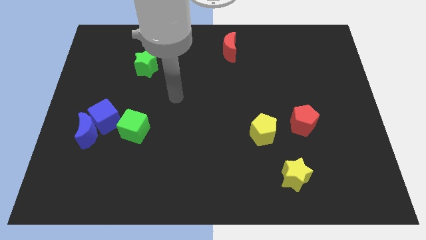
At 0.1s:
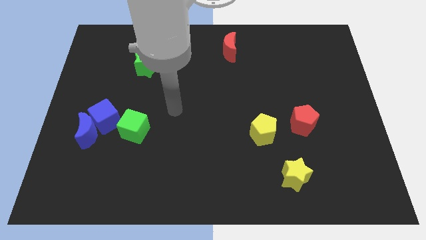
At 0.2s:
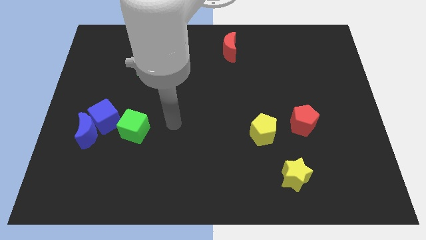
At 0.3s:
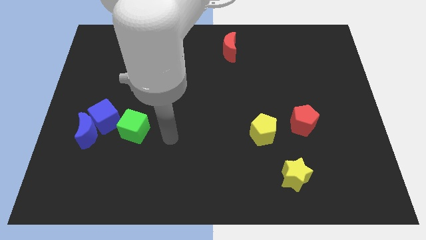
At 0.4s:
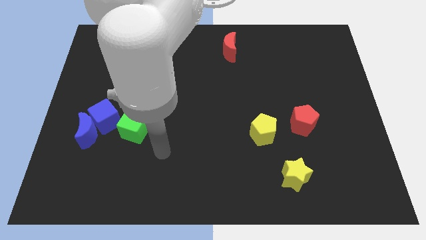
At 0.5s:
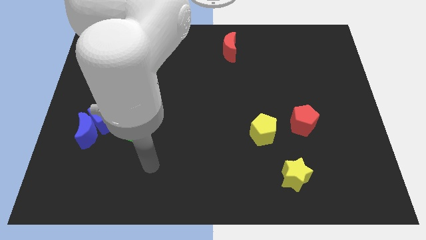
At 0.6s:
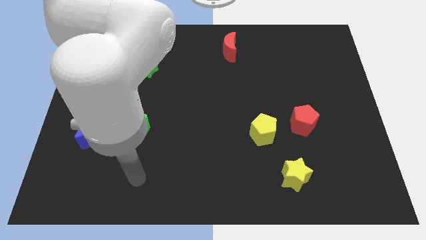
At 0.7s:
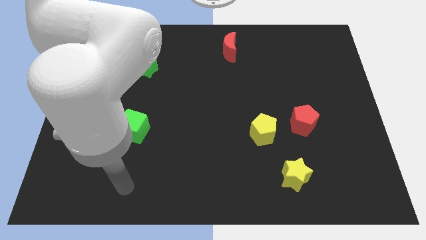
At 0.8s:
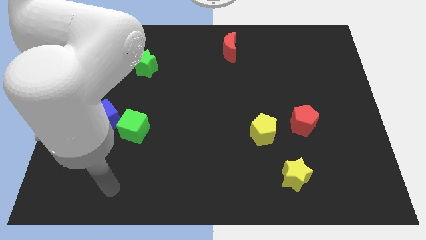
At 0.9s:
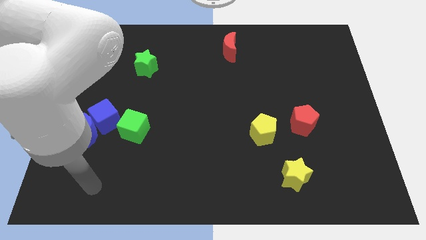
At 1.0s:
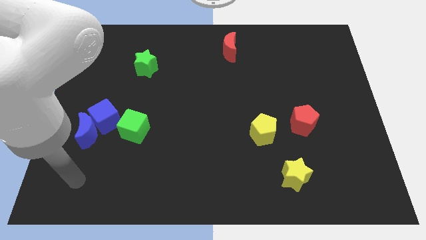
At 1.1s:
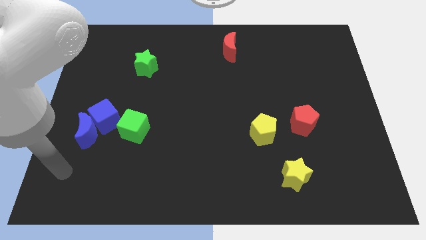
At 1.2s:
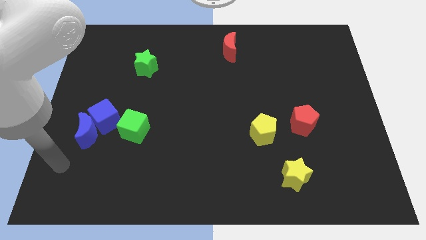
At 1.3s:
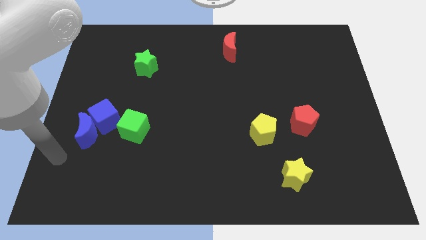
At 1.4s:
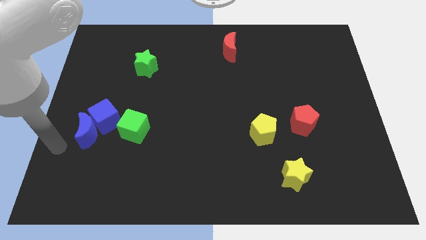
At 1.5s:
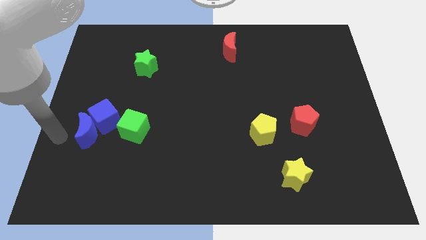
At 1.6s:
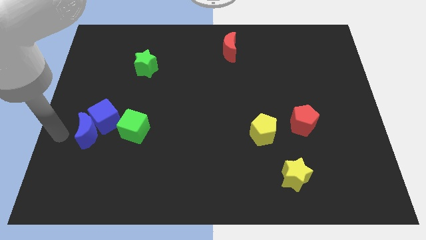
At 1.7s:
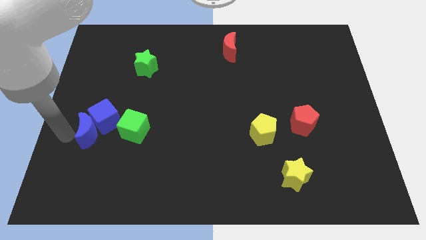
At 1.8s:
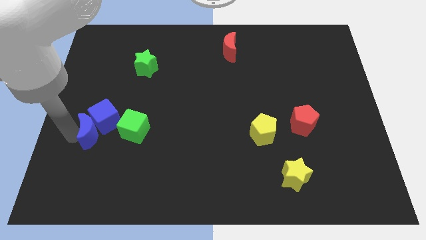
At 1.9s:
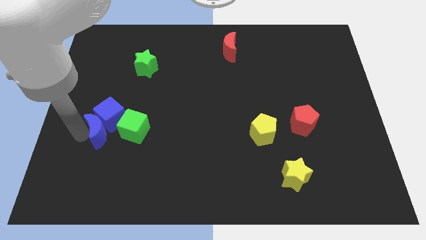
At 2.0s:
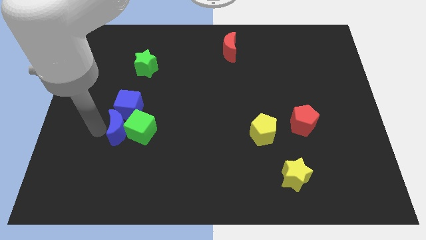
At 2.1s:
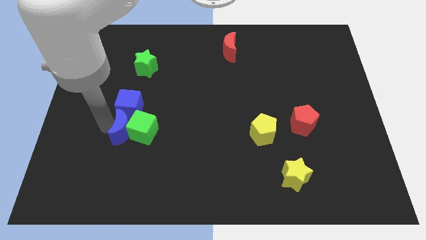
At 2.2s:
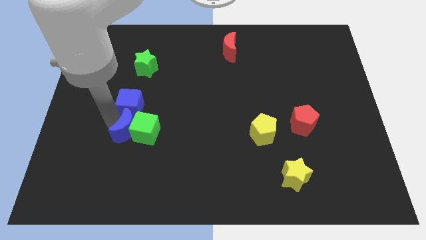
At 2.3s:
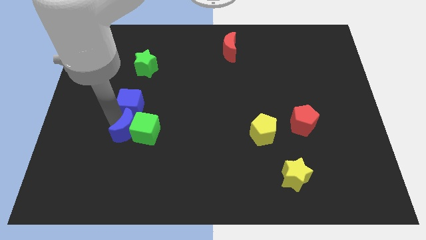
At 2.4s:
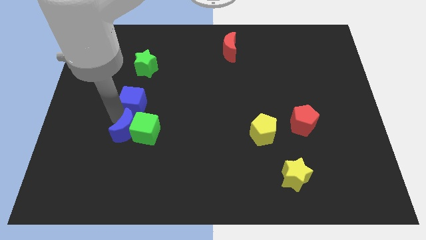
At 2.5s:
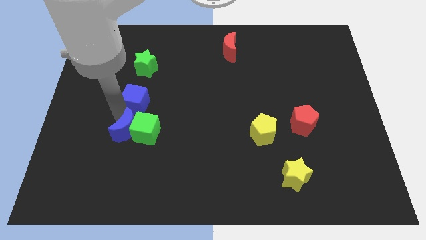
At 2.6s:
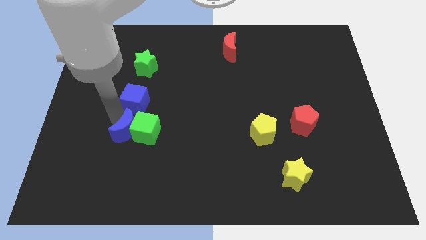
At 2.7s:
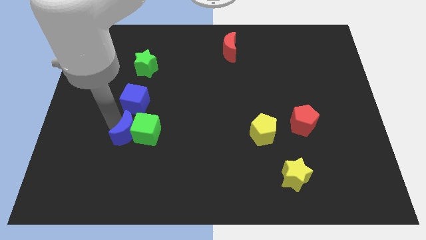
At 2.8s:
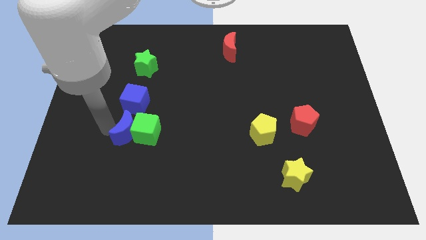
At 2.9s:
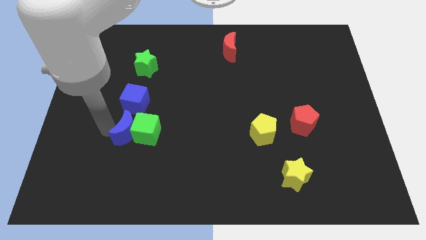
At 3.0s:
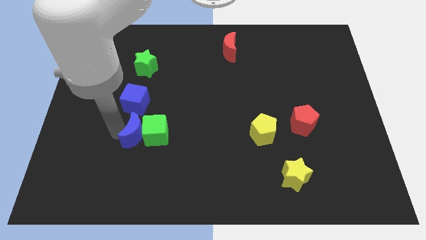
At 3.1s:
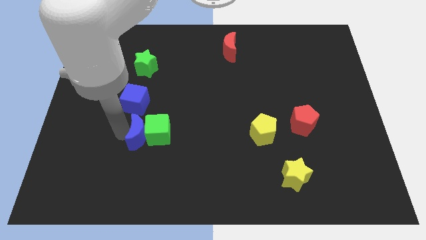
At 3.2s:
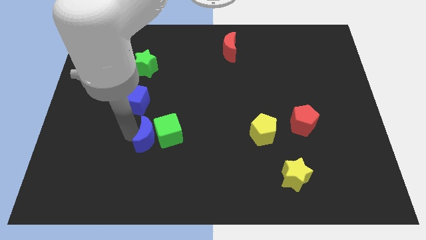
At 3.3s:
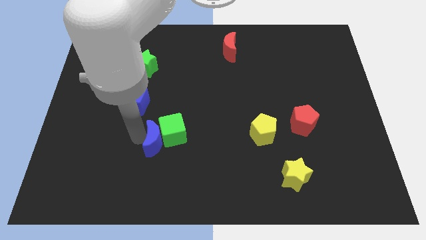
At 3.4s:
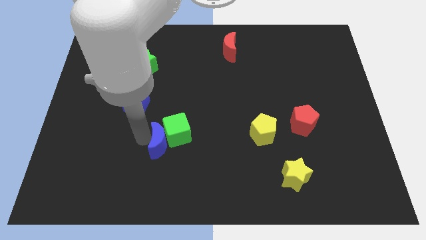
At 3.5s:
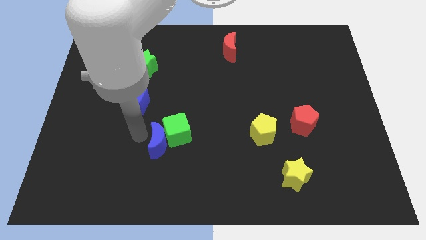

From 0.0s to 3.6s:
separate the blue crescent from blue cube

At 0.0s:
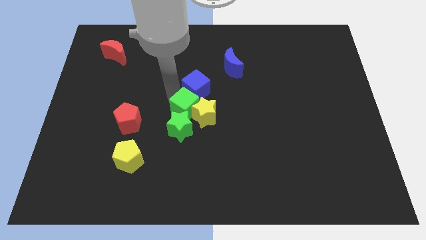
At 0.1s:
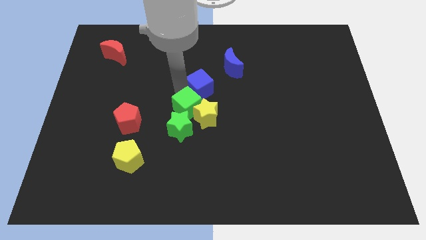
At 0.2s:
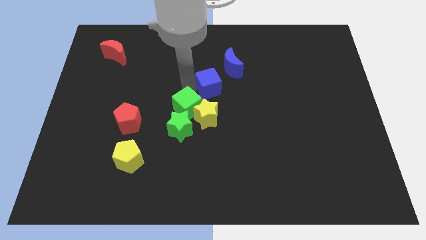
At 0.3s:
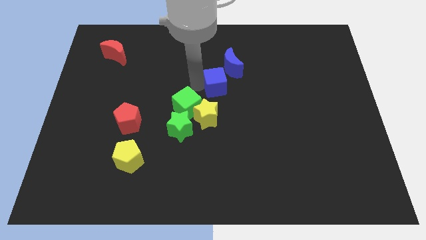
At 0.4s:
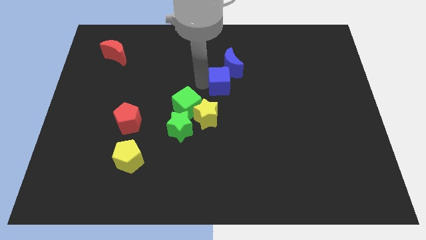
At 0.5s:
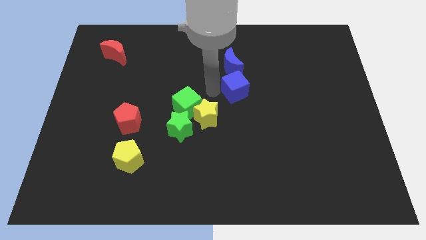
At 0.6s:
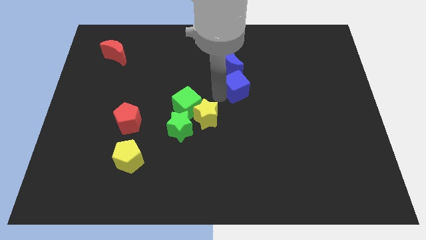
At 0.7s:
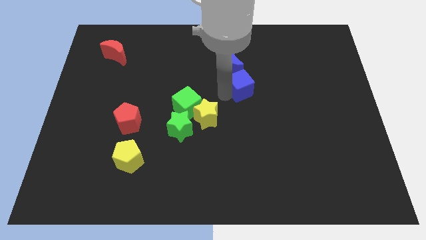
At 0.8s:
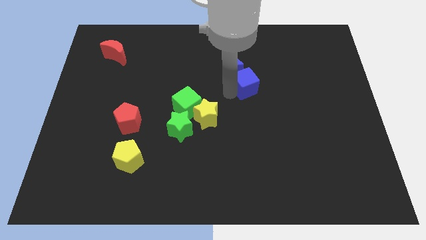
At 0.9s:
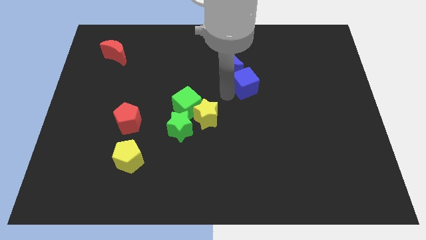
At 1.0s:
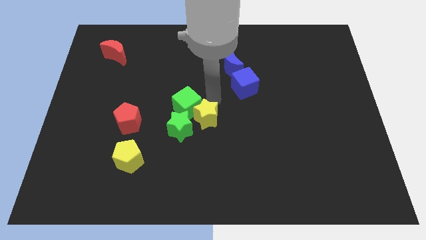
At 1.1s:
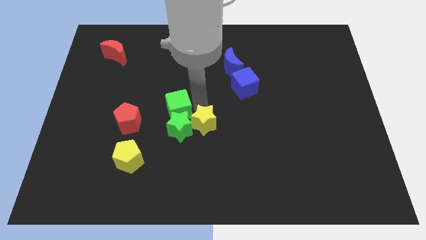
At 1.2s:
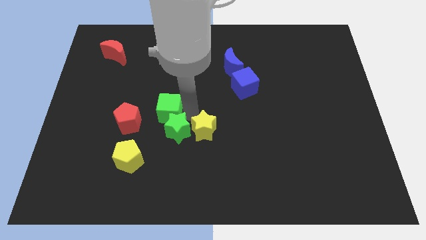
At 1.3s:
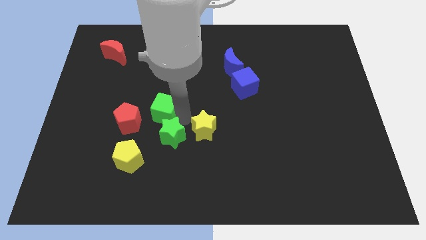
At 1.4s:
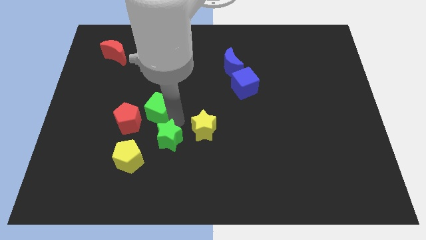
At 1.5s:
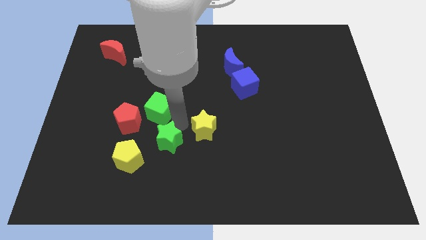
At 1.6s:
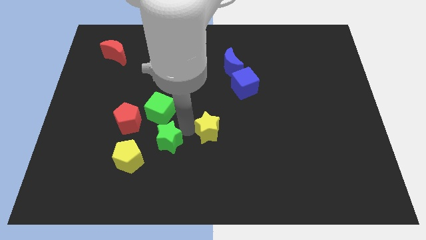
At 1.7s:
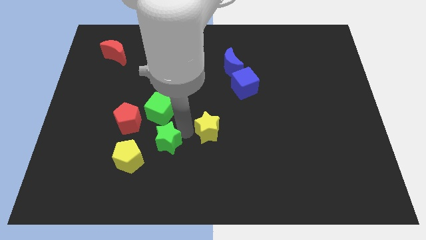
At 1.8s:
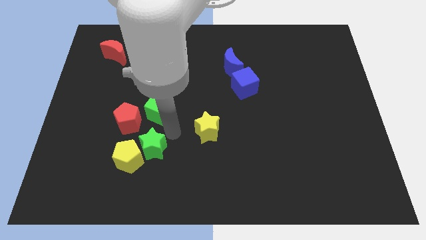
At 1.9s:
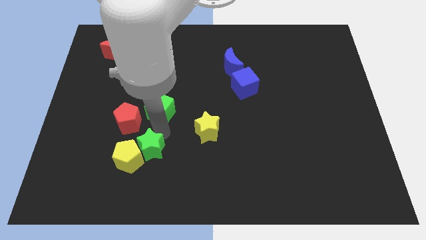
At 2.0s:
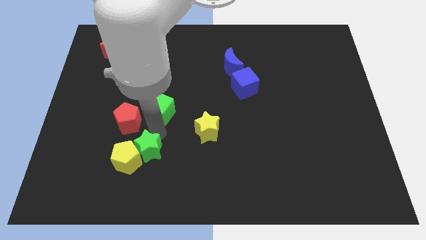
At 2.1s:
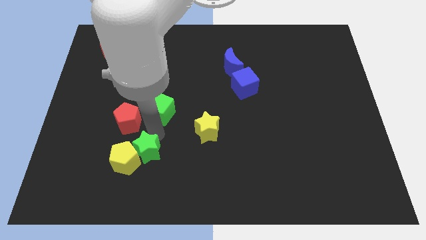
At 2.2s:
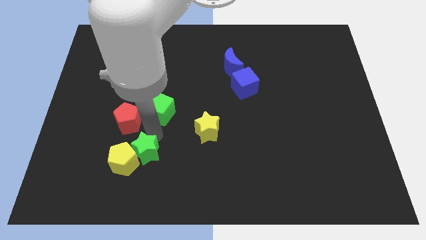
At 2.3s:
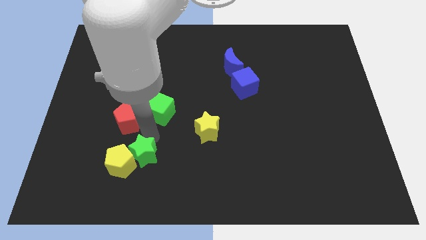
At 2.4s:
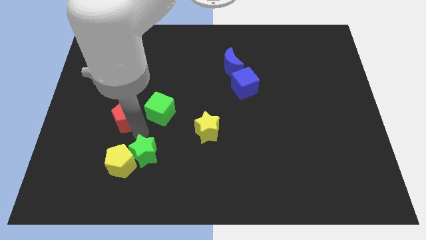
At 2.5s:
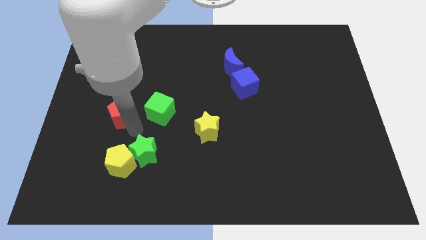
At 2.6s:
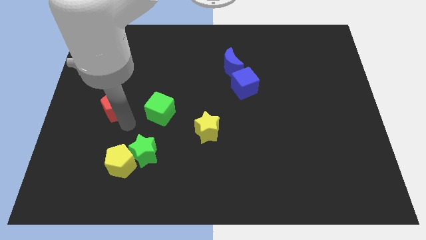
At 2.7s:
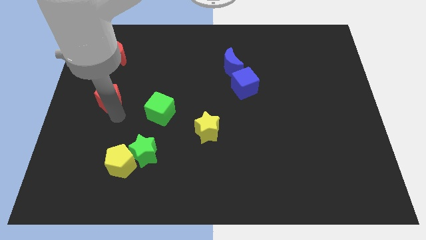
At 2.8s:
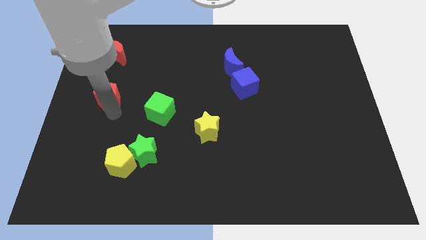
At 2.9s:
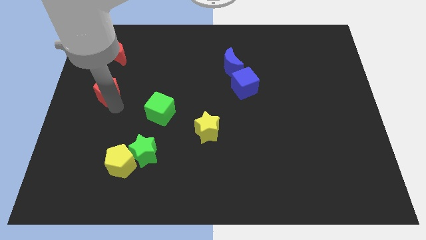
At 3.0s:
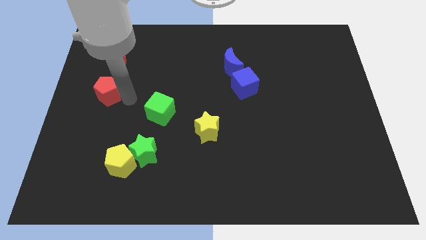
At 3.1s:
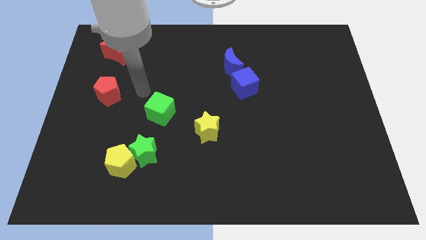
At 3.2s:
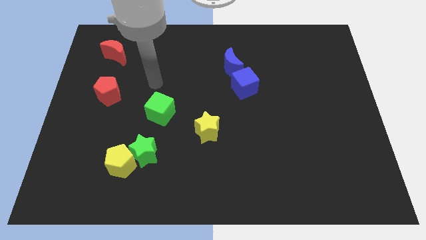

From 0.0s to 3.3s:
push the green star into the yellow pentagon

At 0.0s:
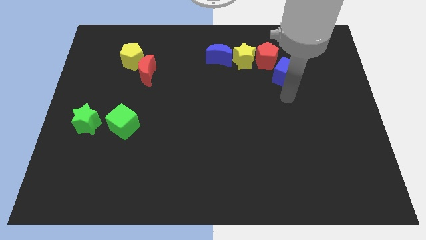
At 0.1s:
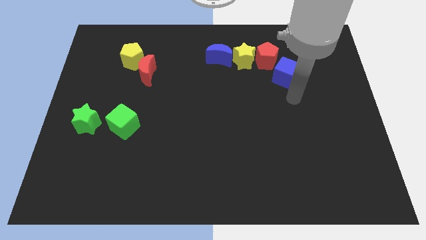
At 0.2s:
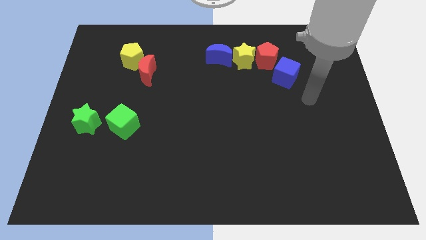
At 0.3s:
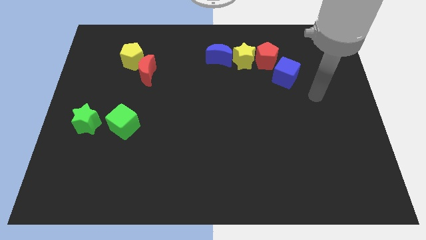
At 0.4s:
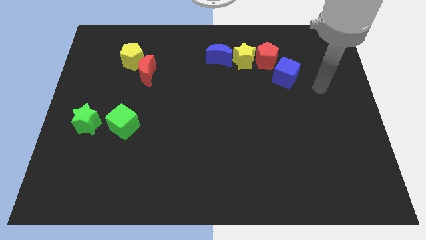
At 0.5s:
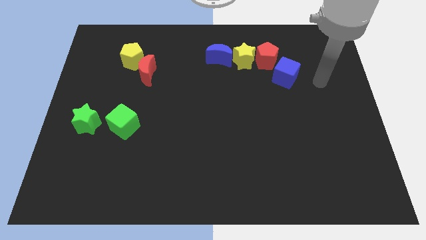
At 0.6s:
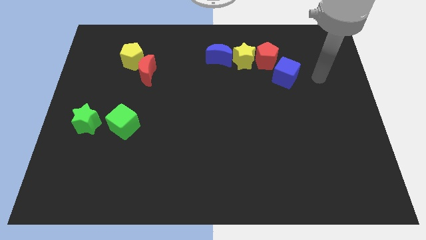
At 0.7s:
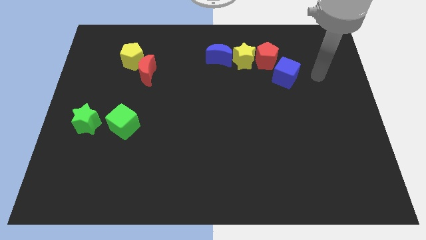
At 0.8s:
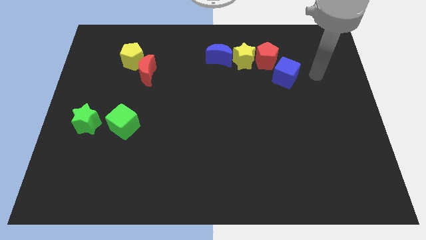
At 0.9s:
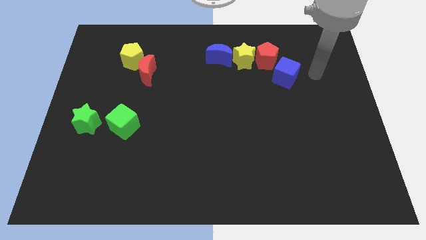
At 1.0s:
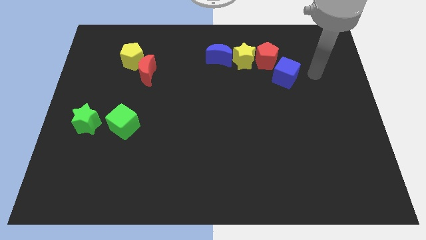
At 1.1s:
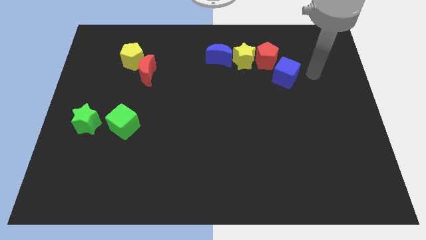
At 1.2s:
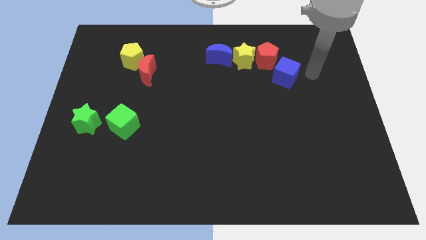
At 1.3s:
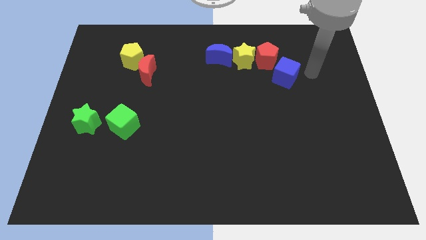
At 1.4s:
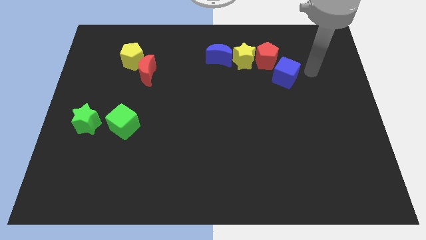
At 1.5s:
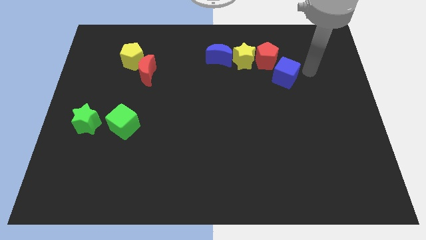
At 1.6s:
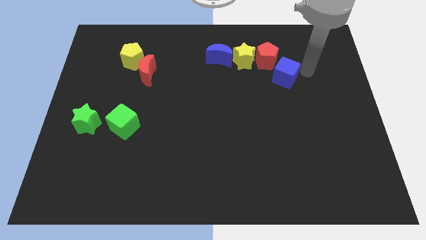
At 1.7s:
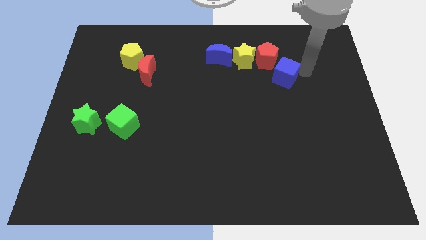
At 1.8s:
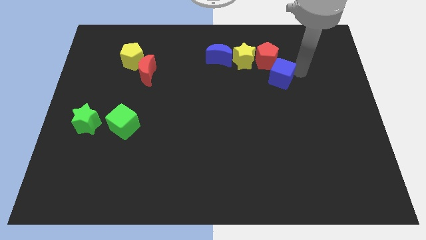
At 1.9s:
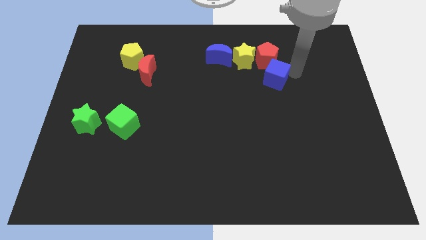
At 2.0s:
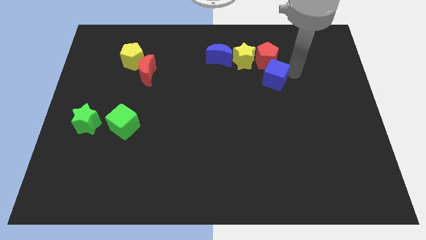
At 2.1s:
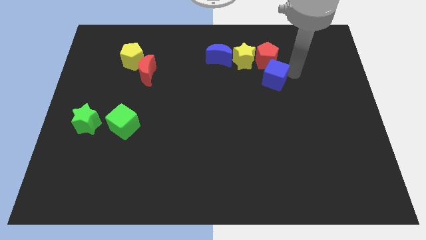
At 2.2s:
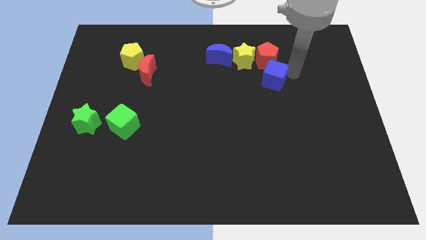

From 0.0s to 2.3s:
place the blue cube below the red pentagon
